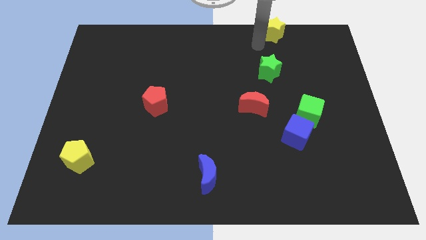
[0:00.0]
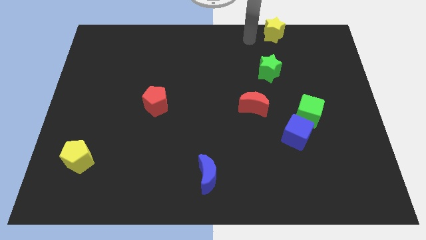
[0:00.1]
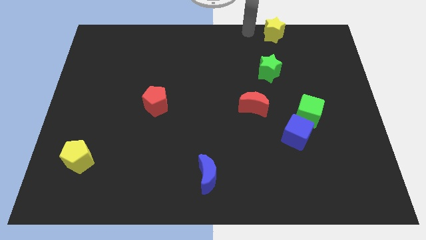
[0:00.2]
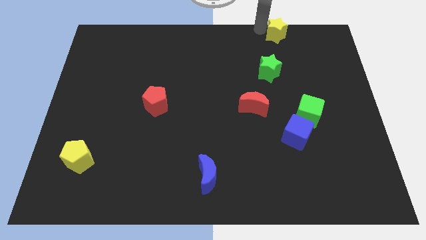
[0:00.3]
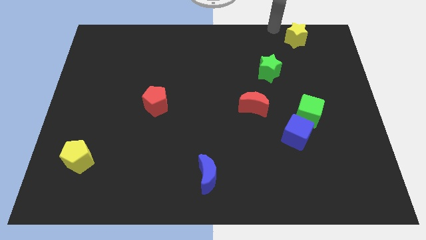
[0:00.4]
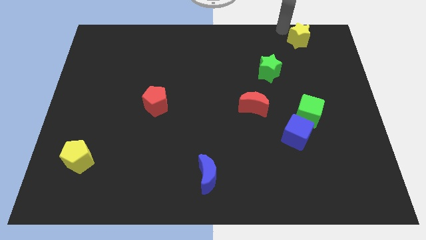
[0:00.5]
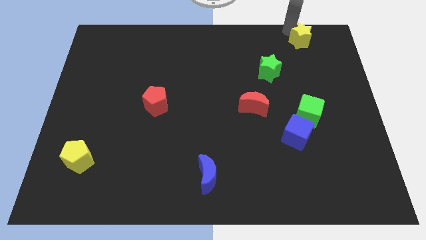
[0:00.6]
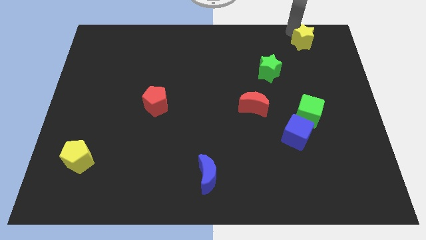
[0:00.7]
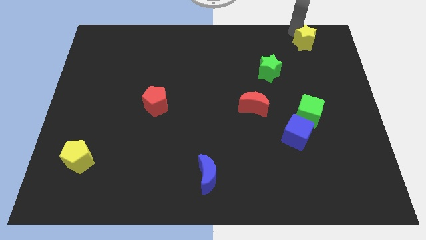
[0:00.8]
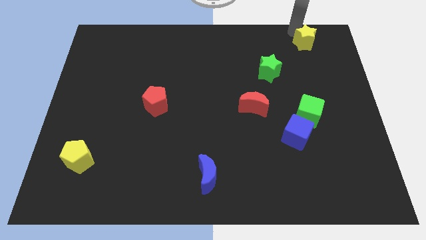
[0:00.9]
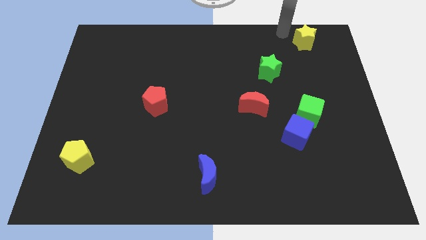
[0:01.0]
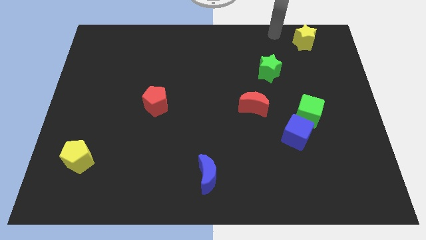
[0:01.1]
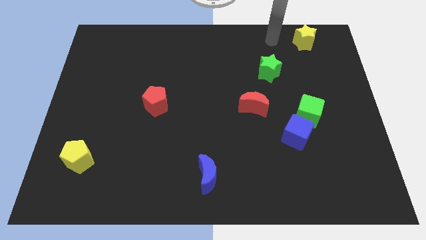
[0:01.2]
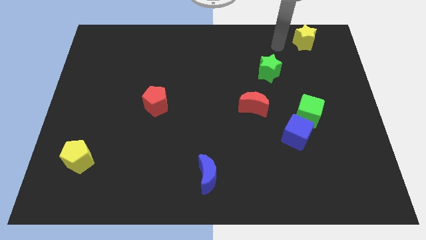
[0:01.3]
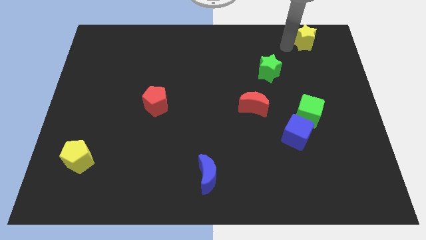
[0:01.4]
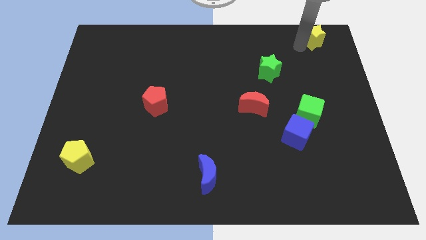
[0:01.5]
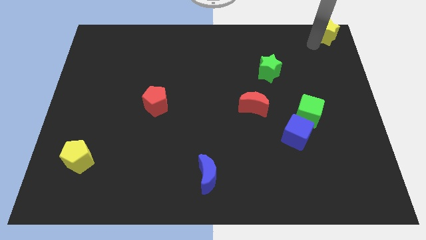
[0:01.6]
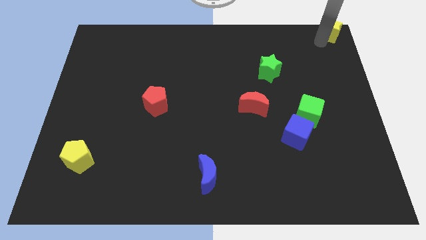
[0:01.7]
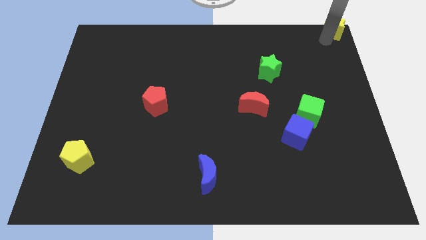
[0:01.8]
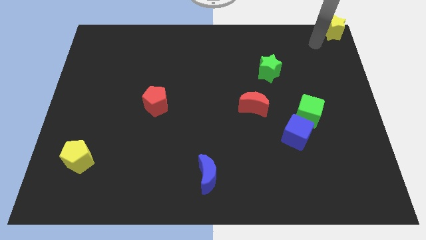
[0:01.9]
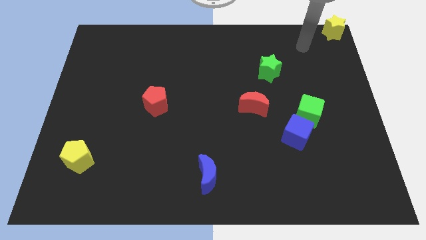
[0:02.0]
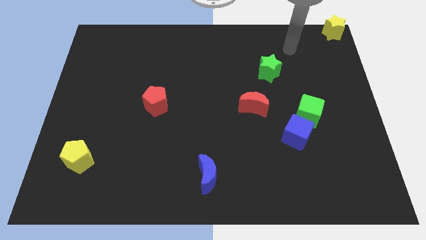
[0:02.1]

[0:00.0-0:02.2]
push the yellow star at the top right corner

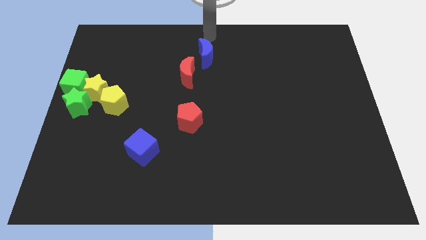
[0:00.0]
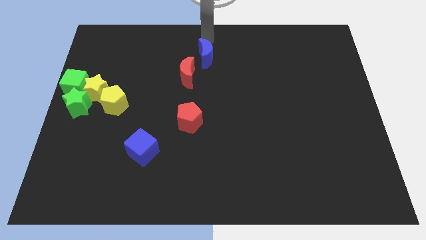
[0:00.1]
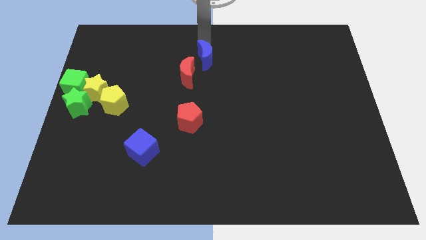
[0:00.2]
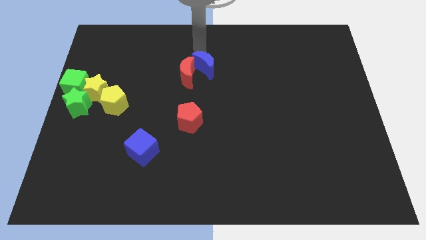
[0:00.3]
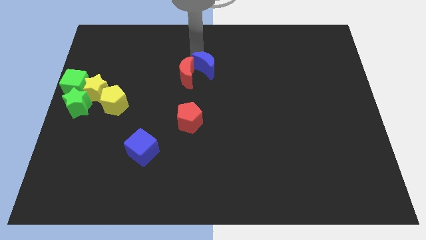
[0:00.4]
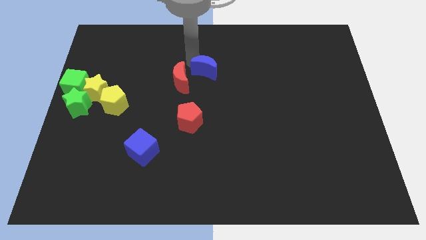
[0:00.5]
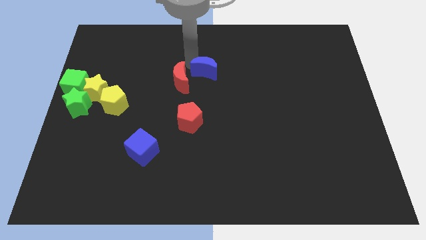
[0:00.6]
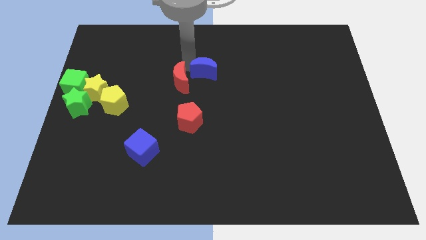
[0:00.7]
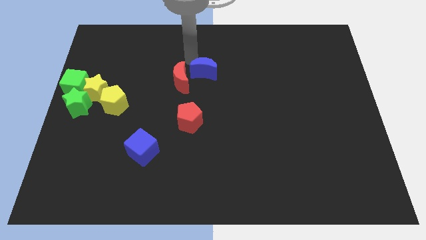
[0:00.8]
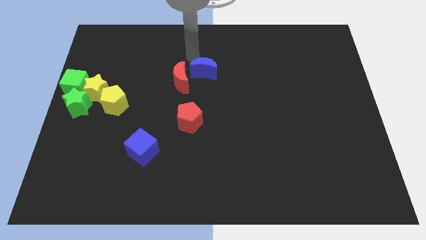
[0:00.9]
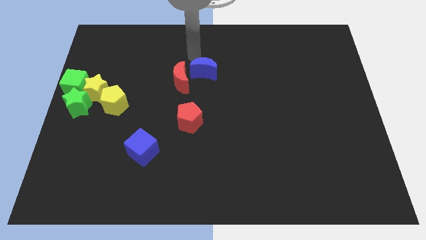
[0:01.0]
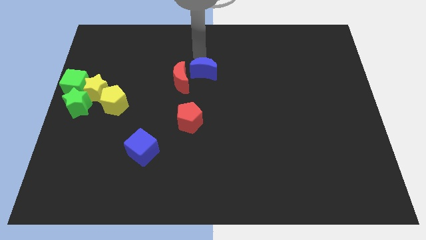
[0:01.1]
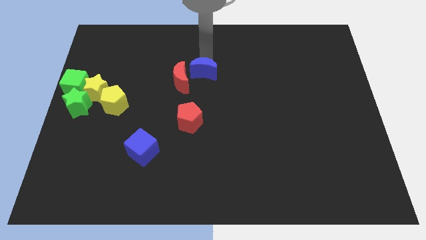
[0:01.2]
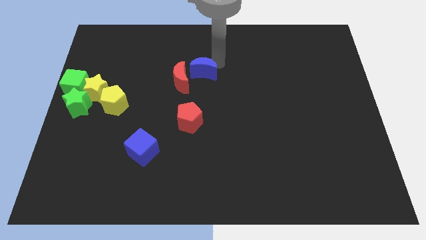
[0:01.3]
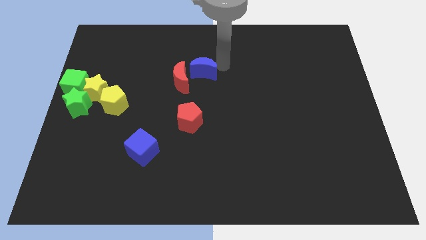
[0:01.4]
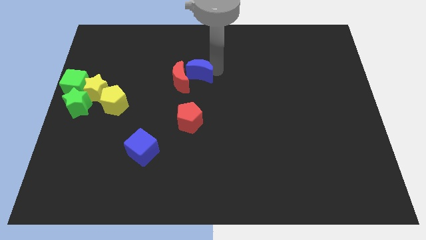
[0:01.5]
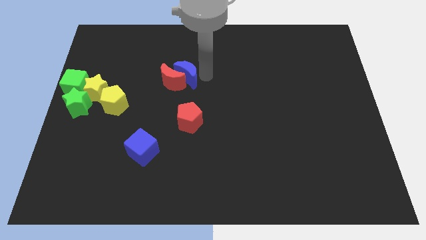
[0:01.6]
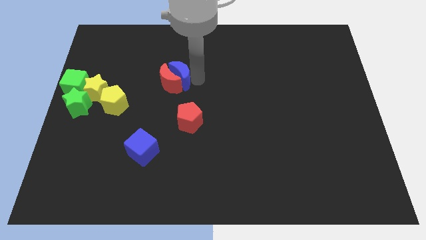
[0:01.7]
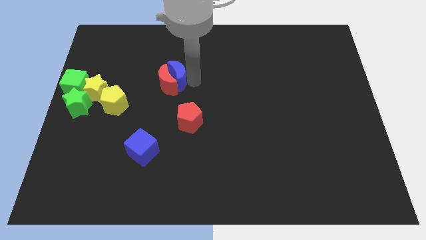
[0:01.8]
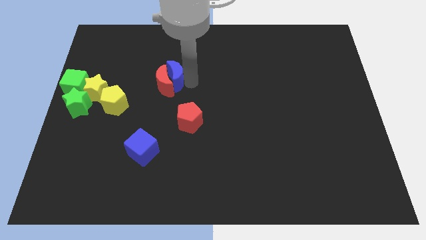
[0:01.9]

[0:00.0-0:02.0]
push the blue moon into the red moon

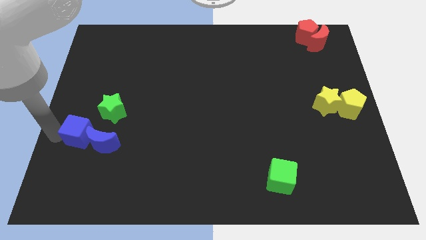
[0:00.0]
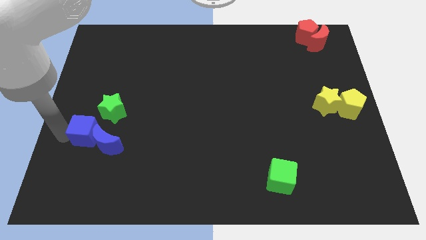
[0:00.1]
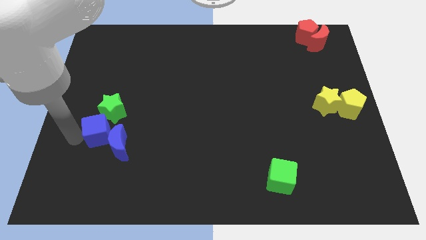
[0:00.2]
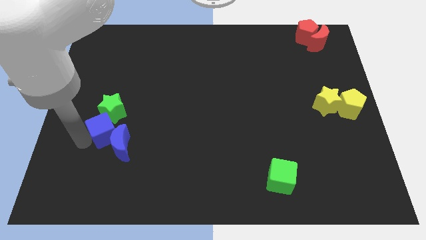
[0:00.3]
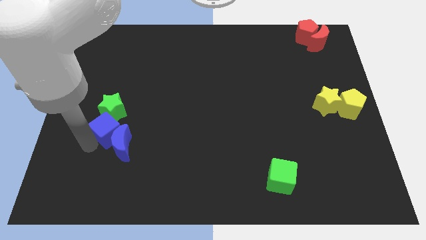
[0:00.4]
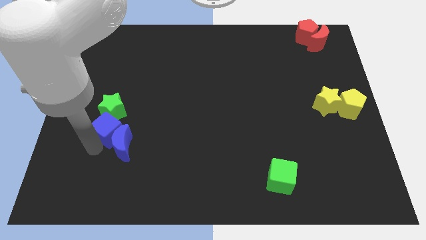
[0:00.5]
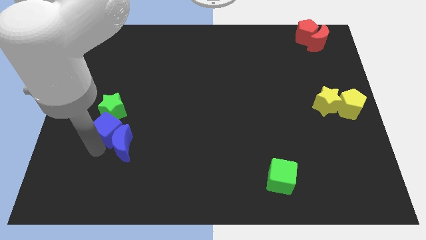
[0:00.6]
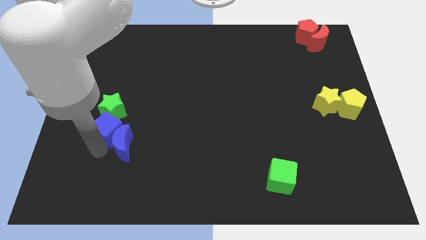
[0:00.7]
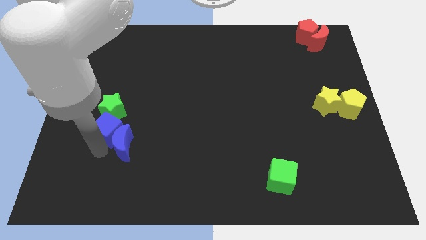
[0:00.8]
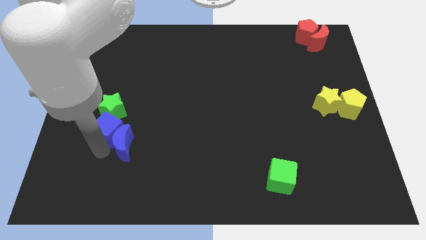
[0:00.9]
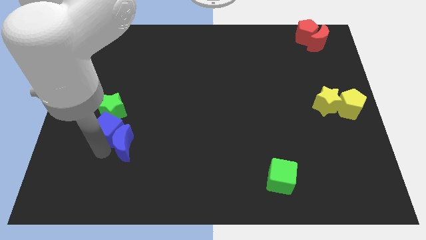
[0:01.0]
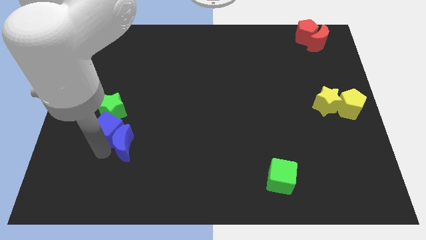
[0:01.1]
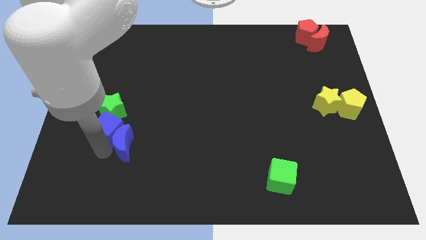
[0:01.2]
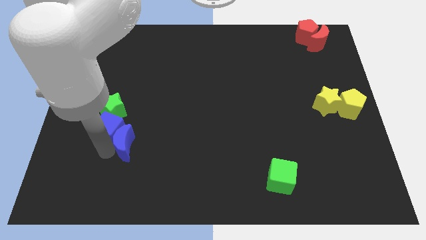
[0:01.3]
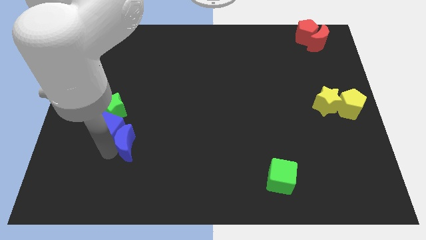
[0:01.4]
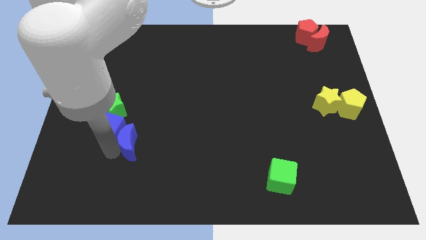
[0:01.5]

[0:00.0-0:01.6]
push the blue cube along the blue crescent slightly right side

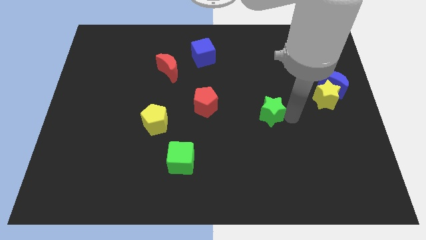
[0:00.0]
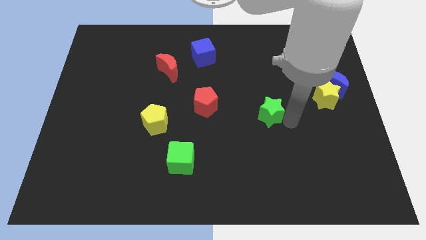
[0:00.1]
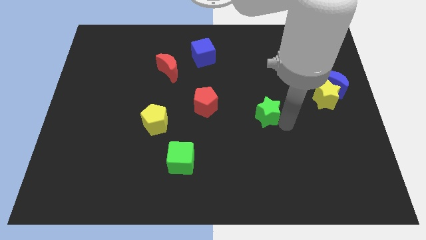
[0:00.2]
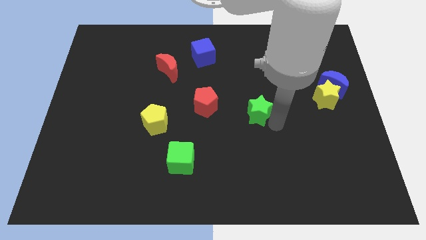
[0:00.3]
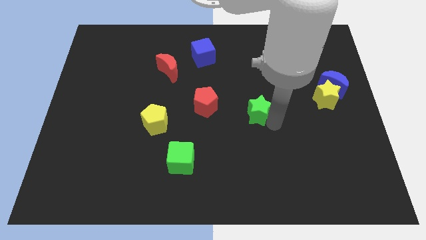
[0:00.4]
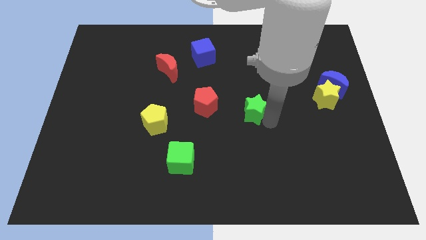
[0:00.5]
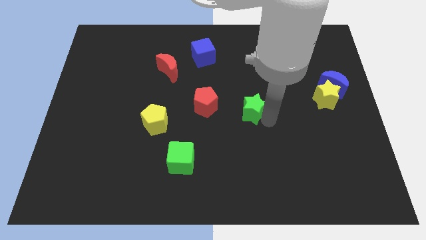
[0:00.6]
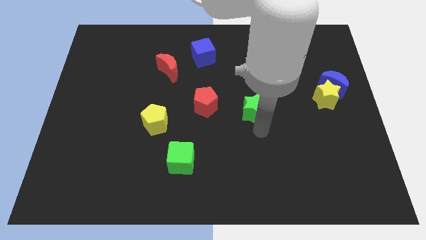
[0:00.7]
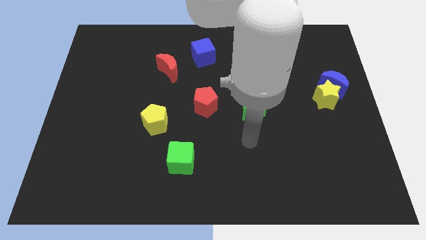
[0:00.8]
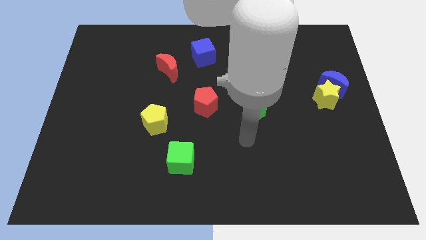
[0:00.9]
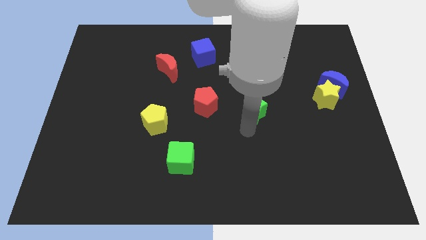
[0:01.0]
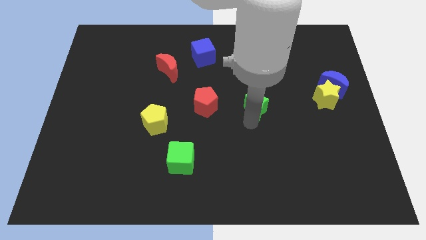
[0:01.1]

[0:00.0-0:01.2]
slide the green star slightly to the left

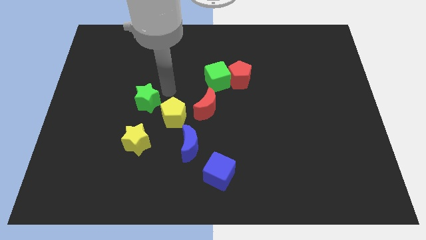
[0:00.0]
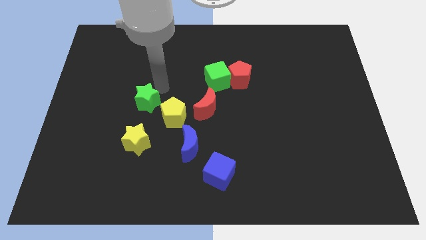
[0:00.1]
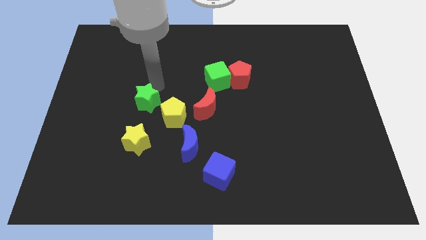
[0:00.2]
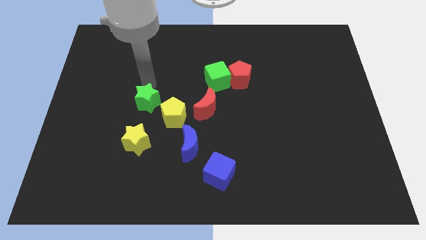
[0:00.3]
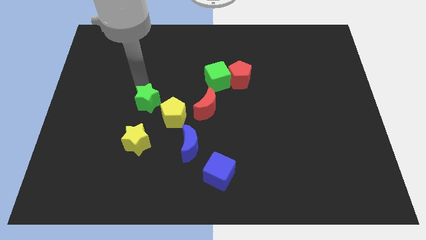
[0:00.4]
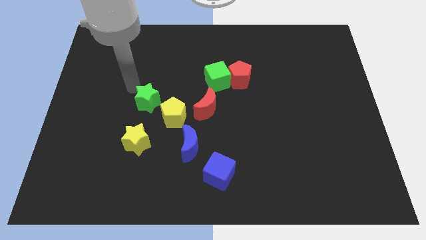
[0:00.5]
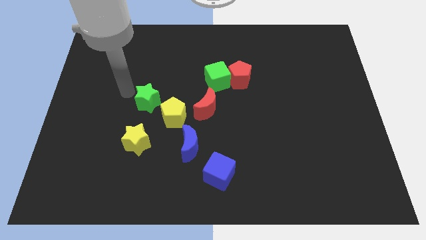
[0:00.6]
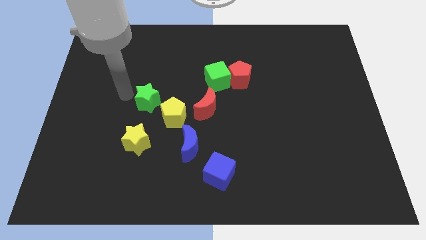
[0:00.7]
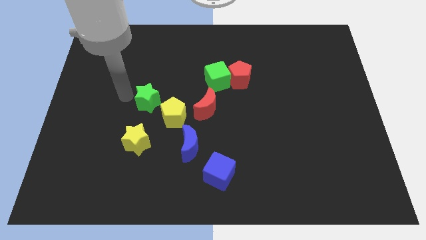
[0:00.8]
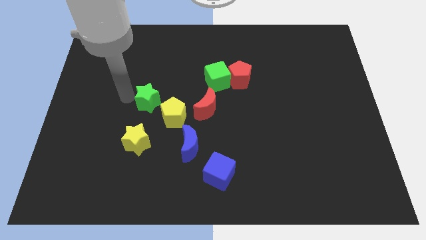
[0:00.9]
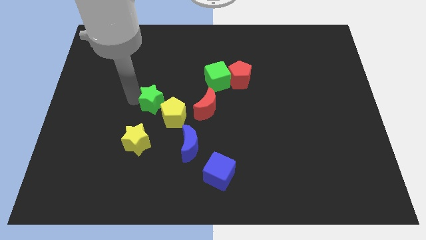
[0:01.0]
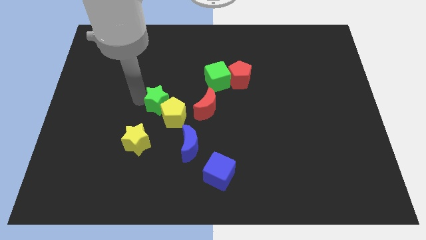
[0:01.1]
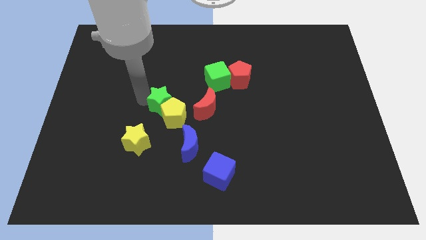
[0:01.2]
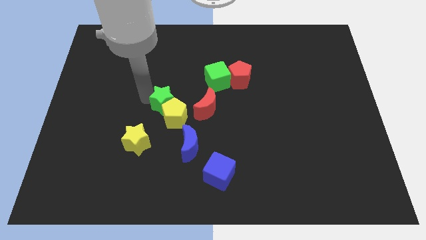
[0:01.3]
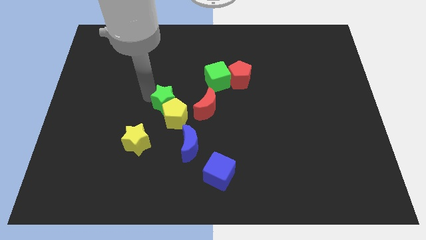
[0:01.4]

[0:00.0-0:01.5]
move the green star left above the yellow pentagon

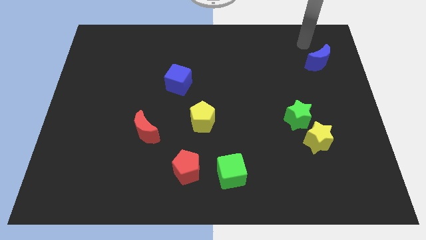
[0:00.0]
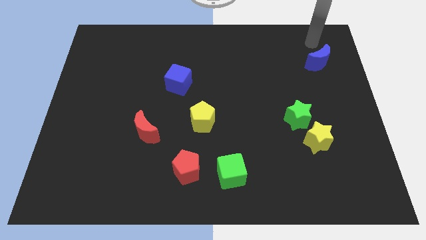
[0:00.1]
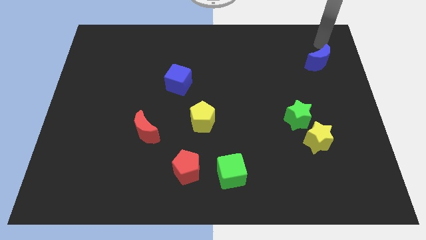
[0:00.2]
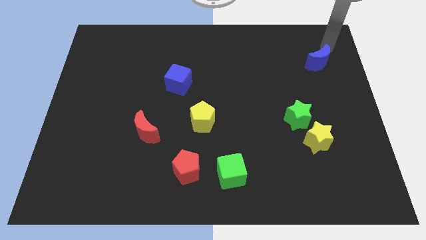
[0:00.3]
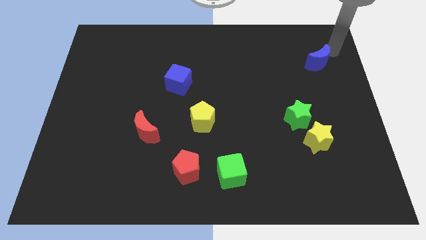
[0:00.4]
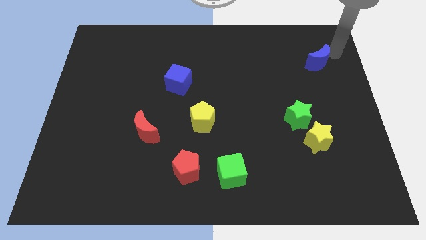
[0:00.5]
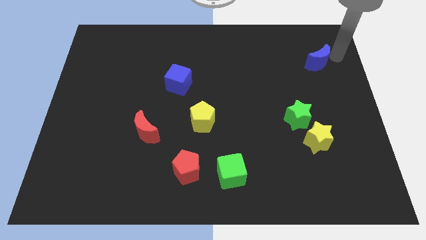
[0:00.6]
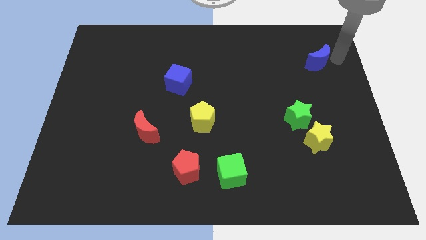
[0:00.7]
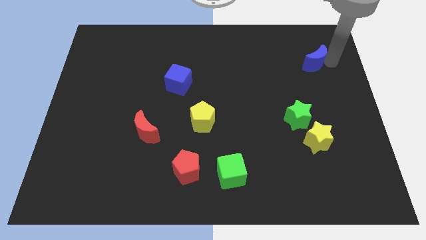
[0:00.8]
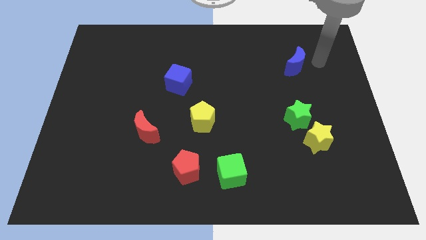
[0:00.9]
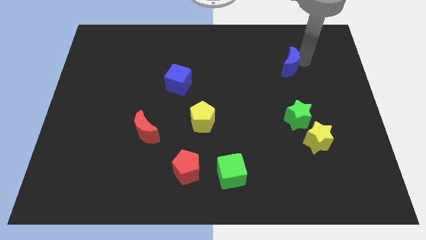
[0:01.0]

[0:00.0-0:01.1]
drag the blue moon towards the bottom left side of the board
